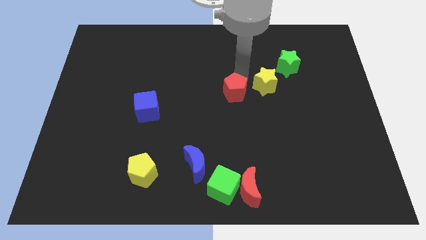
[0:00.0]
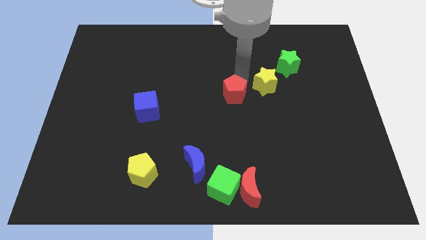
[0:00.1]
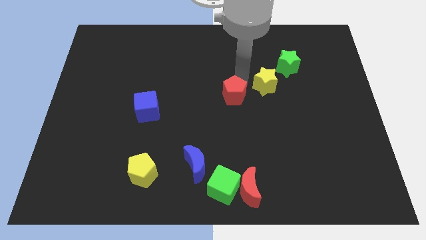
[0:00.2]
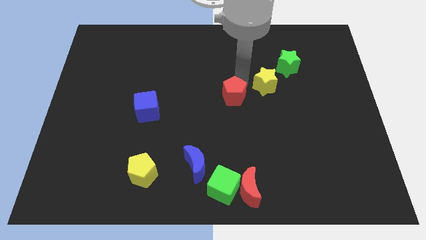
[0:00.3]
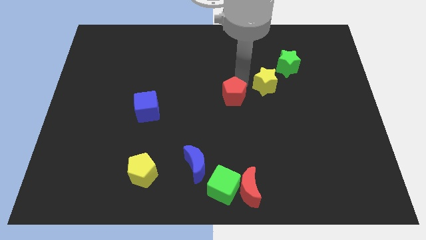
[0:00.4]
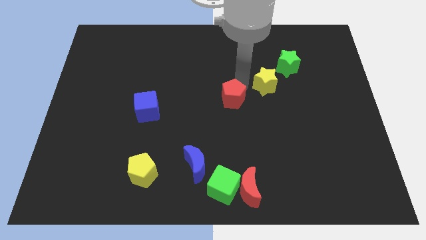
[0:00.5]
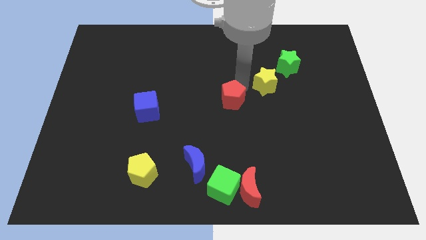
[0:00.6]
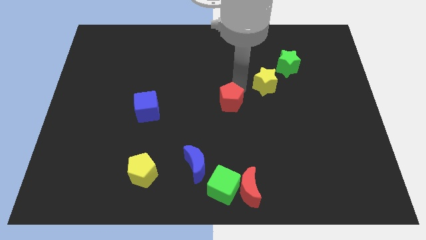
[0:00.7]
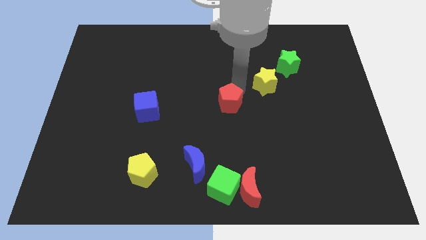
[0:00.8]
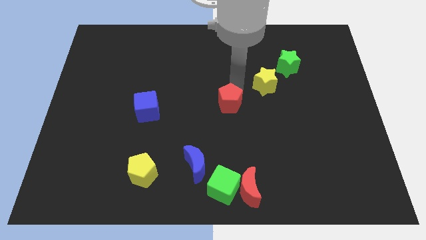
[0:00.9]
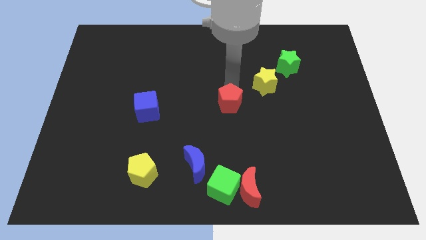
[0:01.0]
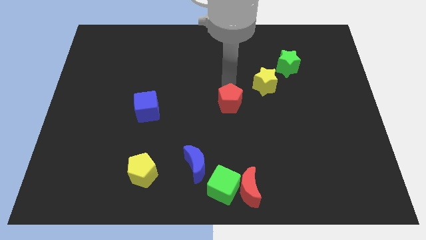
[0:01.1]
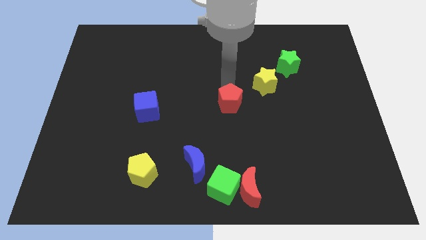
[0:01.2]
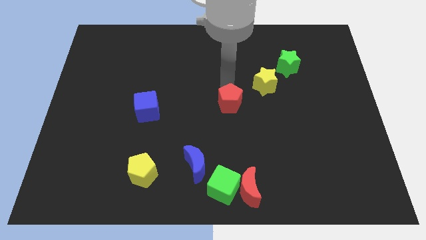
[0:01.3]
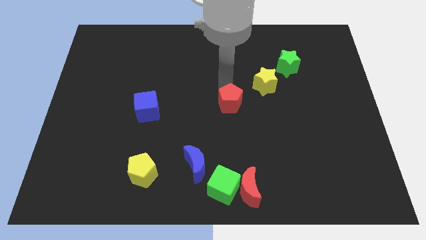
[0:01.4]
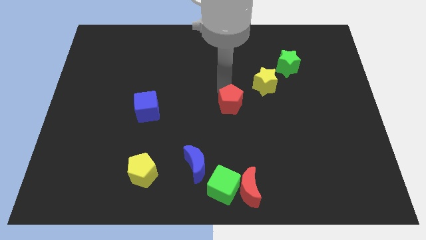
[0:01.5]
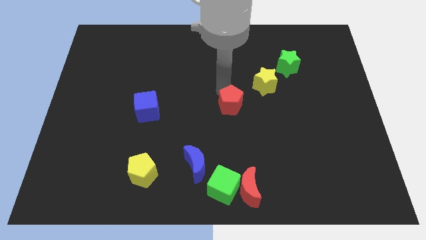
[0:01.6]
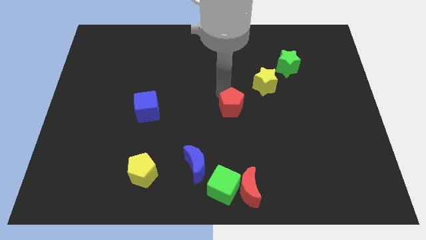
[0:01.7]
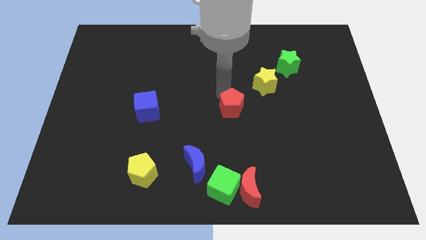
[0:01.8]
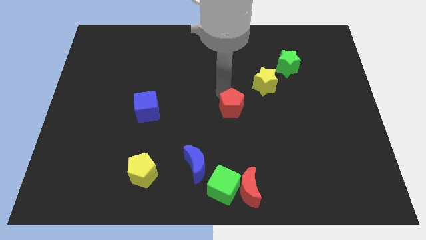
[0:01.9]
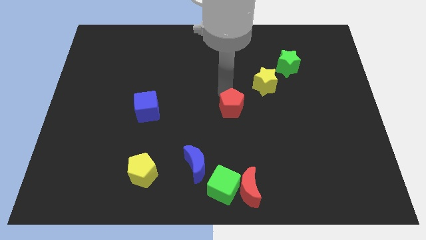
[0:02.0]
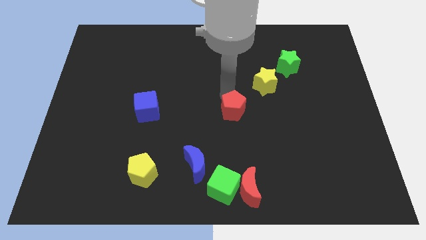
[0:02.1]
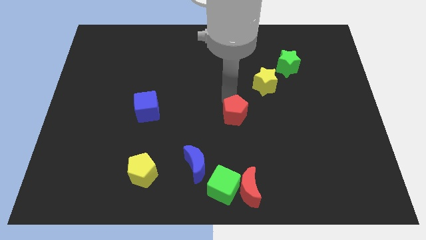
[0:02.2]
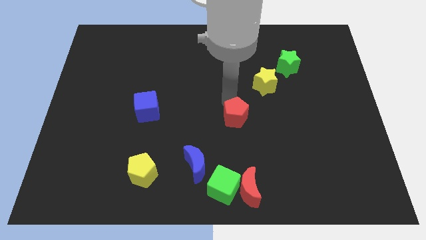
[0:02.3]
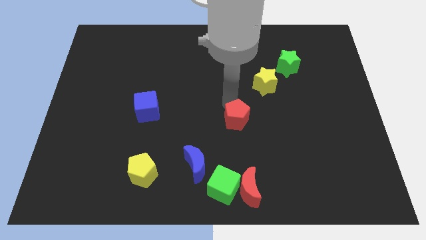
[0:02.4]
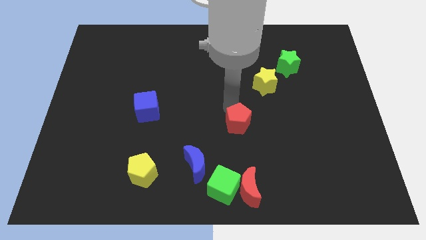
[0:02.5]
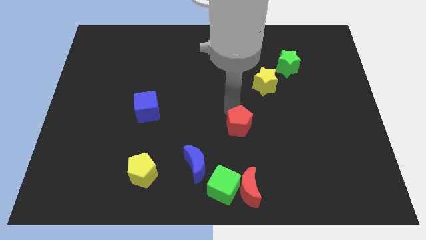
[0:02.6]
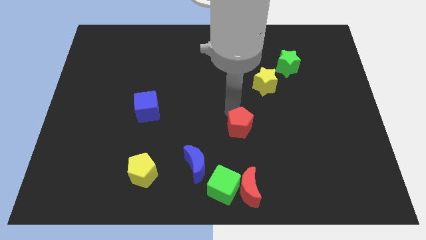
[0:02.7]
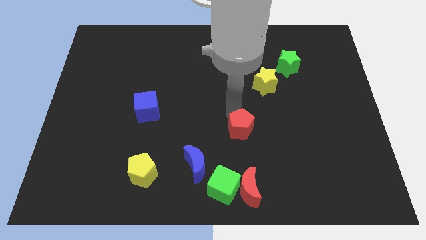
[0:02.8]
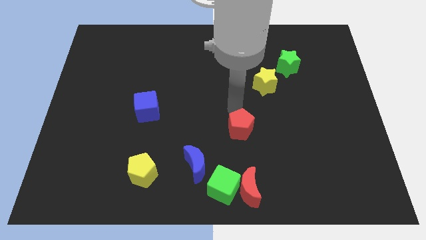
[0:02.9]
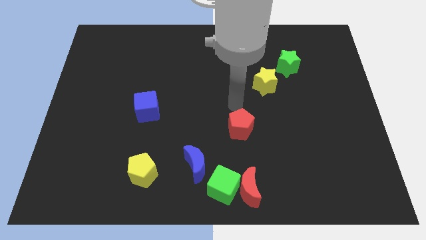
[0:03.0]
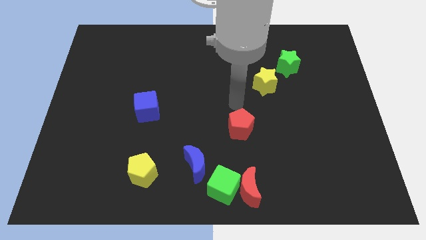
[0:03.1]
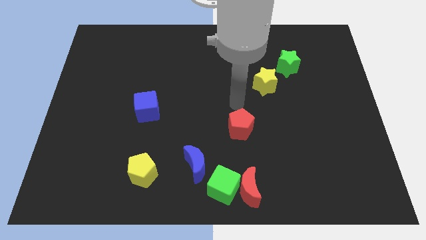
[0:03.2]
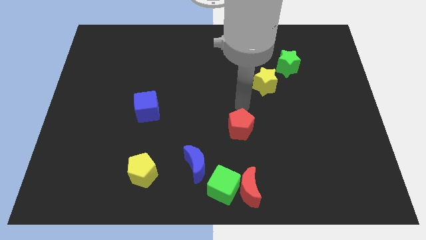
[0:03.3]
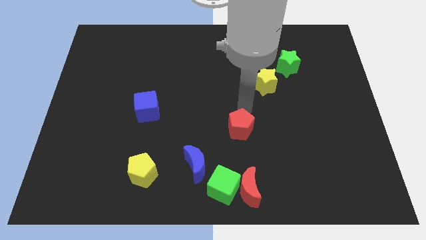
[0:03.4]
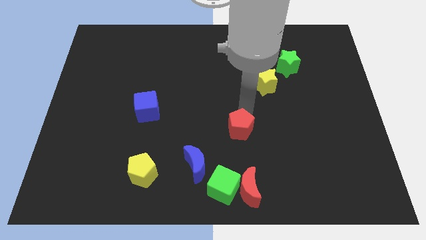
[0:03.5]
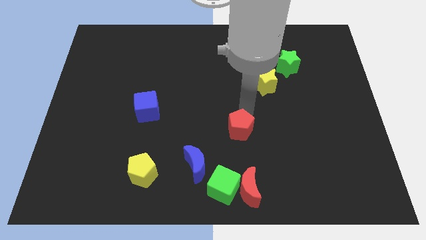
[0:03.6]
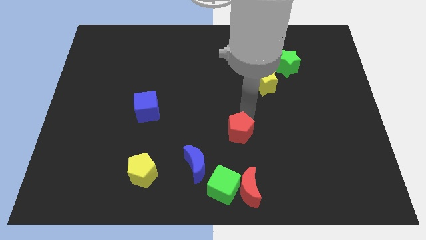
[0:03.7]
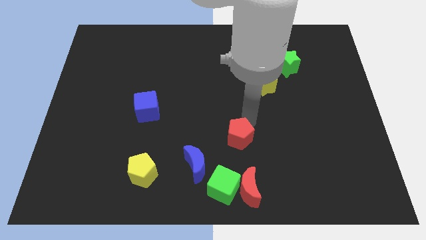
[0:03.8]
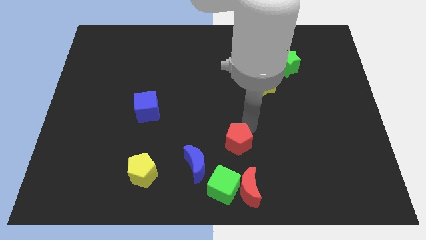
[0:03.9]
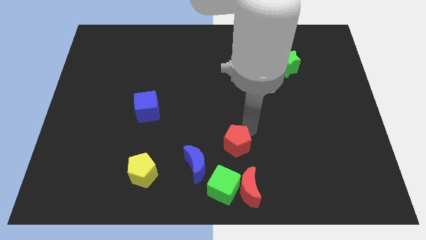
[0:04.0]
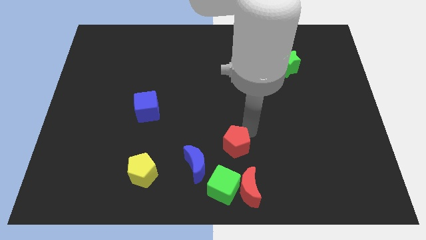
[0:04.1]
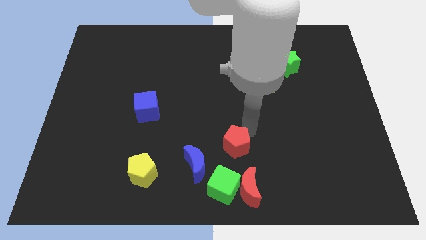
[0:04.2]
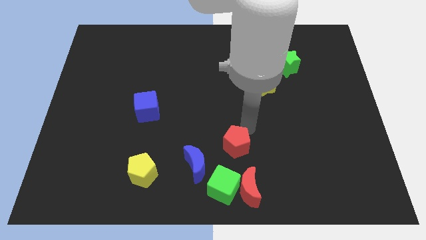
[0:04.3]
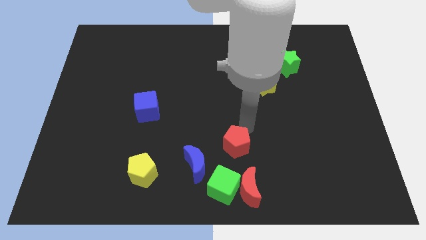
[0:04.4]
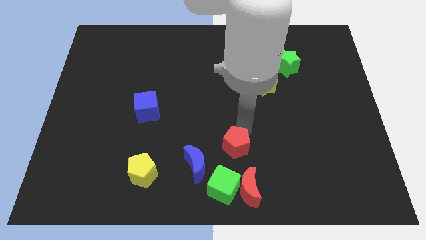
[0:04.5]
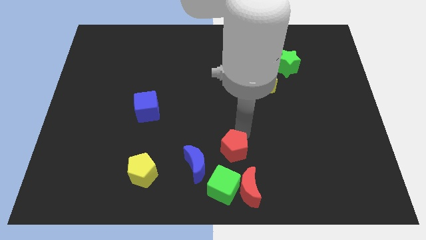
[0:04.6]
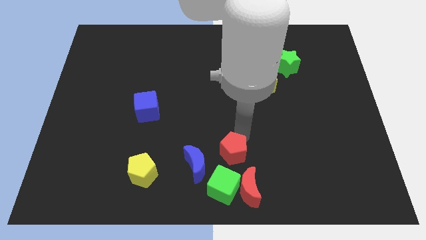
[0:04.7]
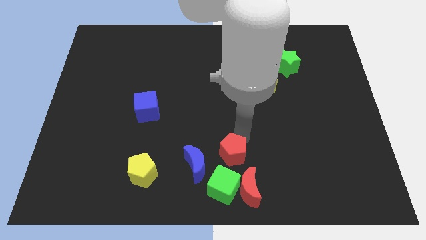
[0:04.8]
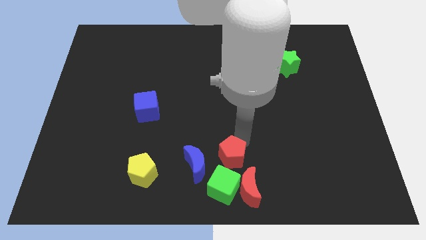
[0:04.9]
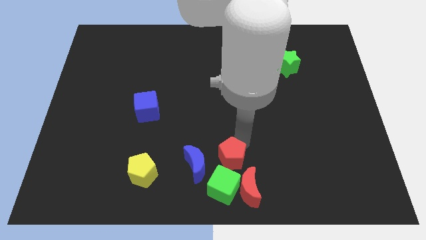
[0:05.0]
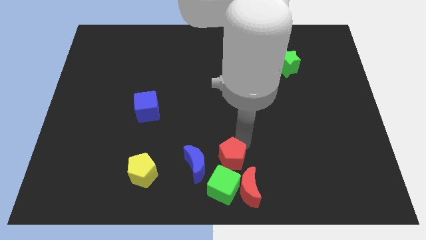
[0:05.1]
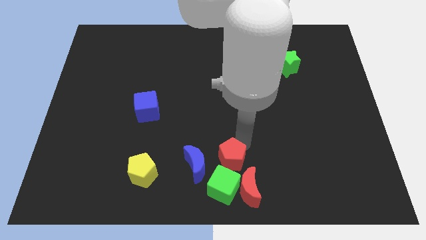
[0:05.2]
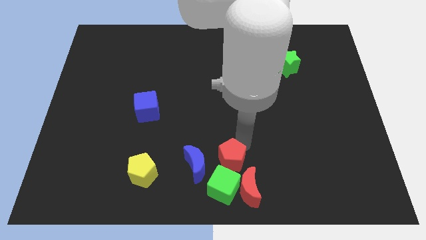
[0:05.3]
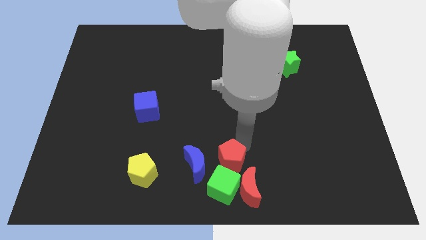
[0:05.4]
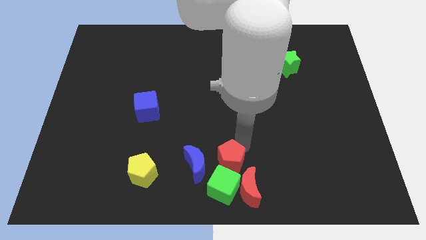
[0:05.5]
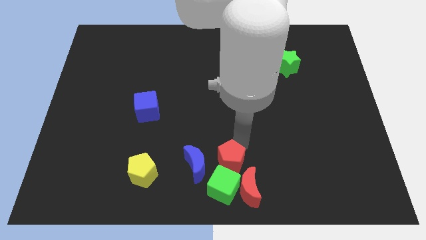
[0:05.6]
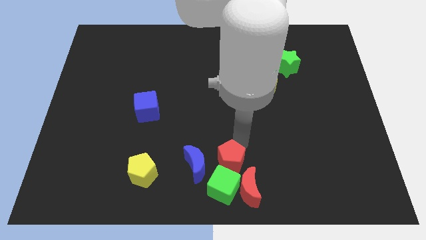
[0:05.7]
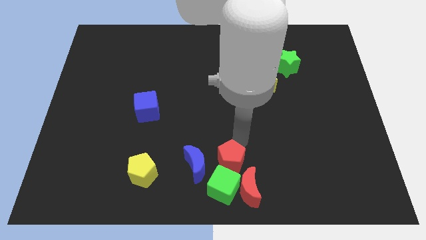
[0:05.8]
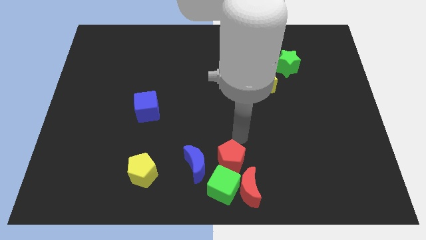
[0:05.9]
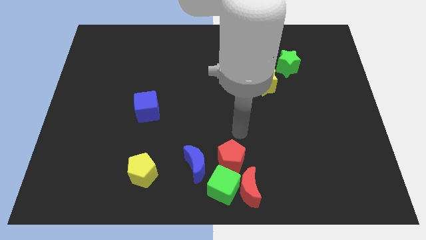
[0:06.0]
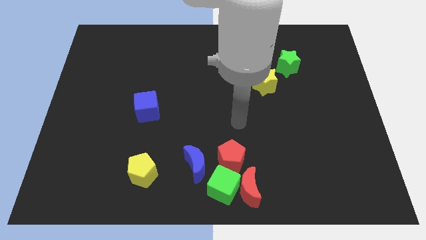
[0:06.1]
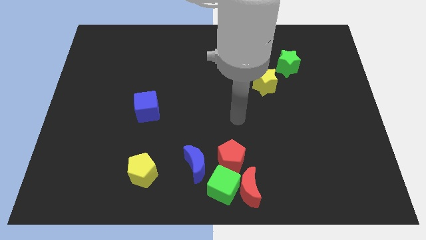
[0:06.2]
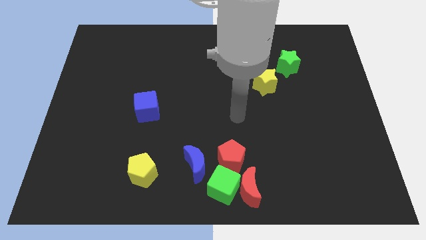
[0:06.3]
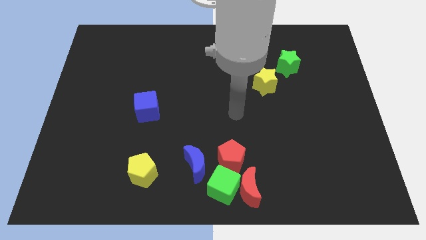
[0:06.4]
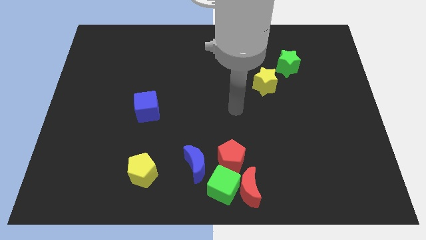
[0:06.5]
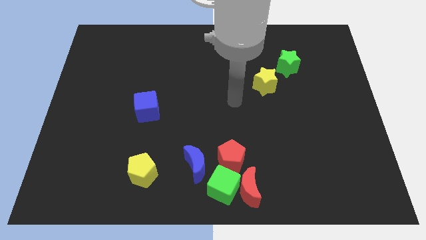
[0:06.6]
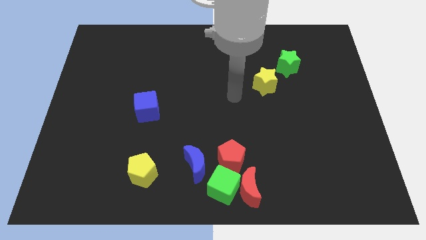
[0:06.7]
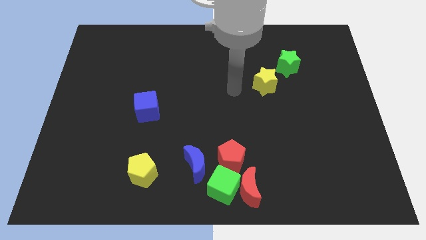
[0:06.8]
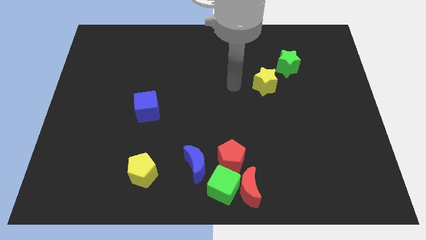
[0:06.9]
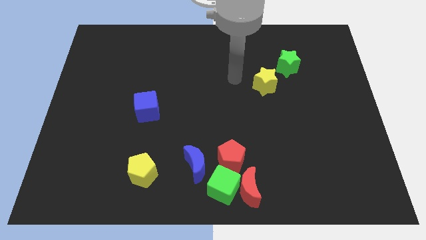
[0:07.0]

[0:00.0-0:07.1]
push red pentagon into green cube

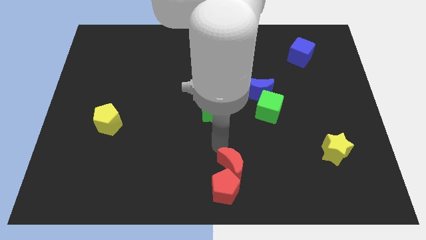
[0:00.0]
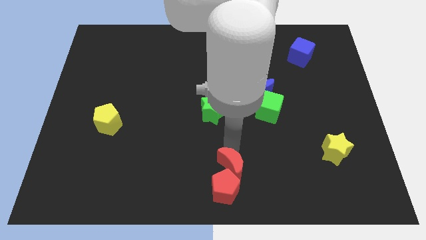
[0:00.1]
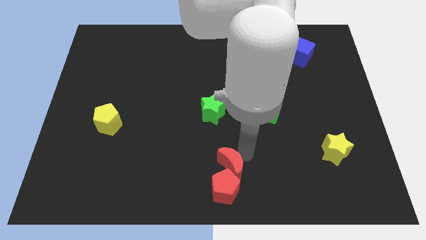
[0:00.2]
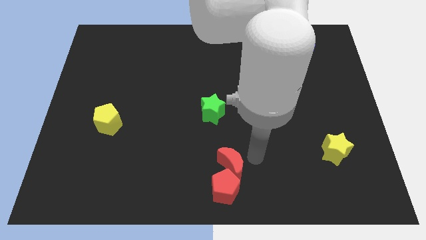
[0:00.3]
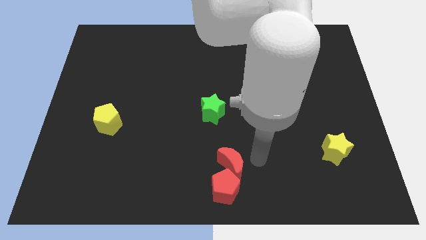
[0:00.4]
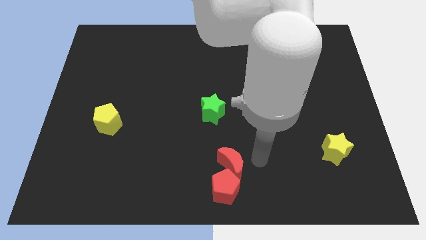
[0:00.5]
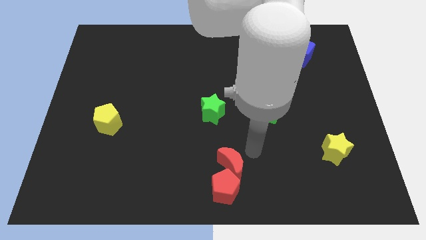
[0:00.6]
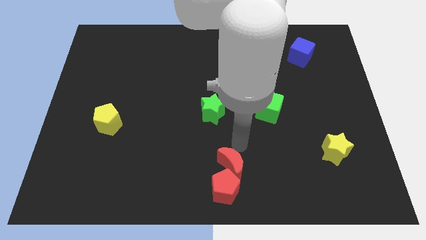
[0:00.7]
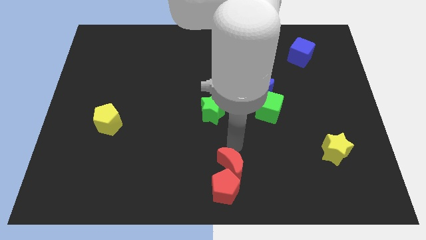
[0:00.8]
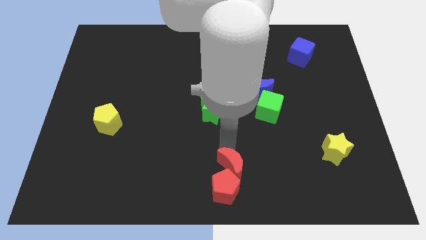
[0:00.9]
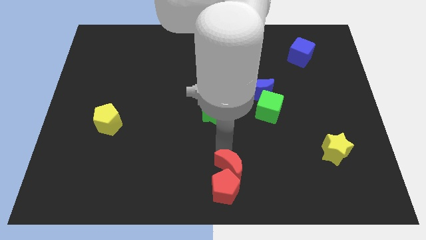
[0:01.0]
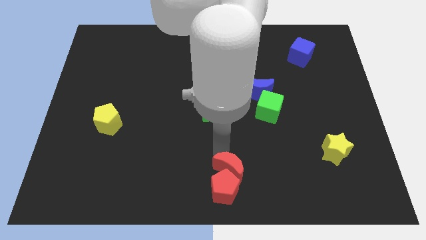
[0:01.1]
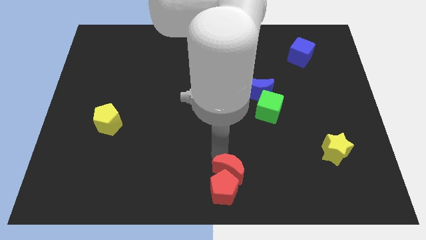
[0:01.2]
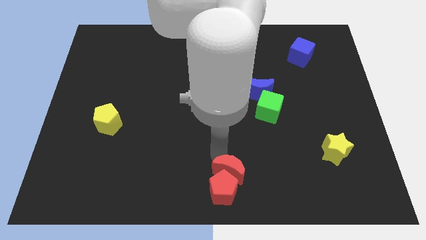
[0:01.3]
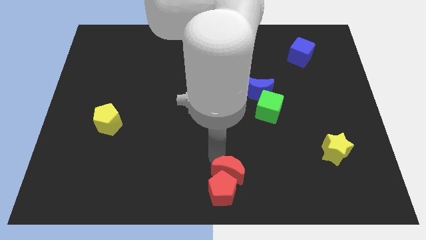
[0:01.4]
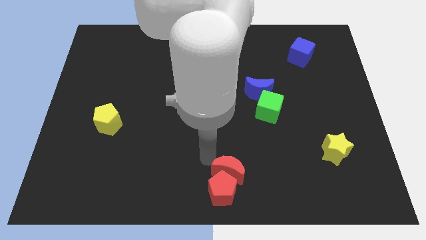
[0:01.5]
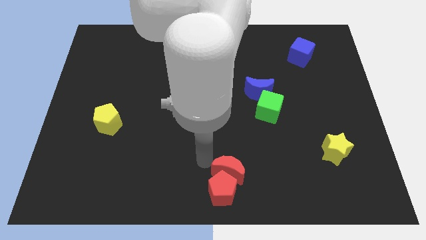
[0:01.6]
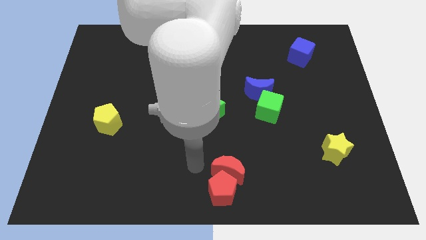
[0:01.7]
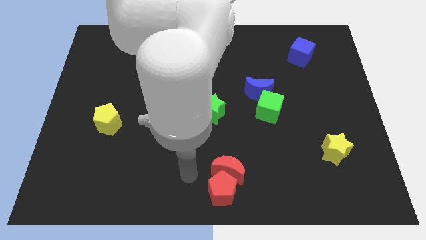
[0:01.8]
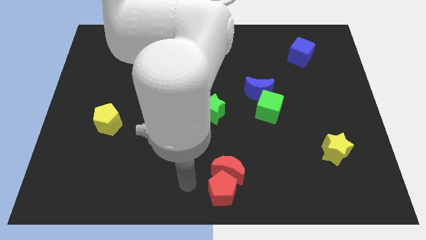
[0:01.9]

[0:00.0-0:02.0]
move the red blocks towards the bottom center of the board
